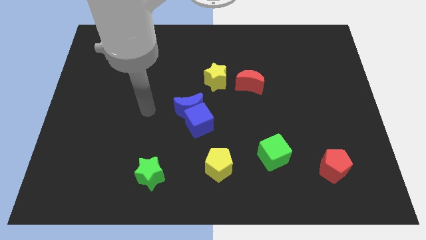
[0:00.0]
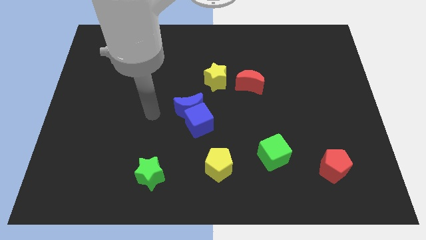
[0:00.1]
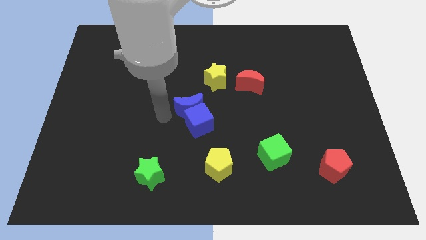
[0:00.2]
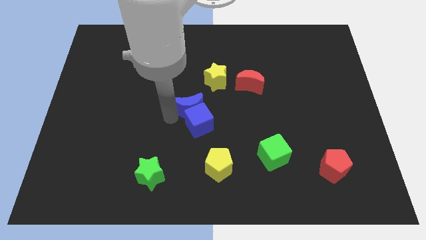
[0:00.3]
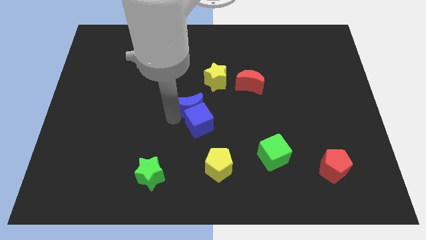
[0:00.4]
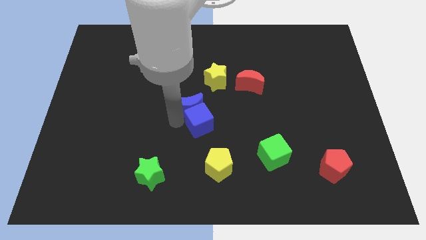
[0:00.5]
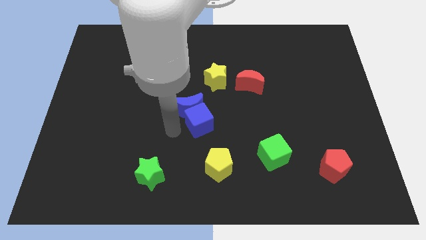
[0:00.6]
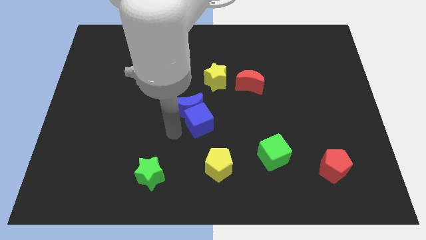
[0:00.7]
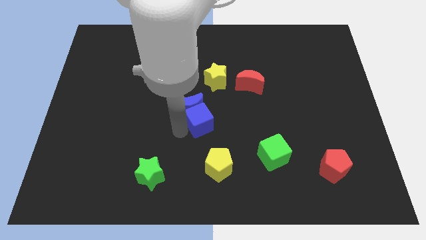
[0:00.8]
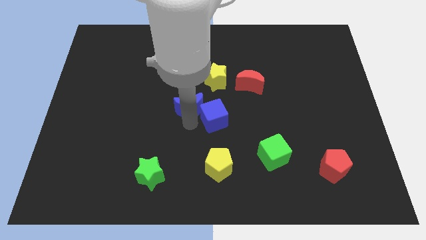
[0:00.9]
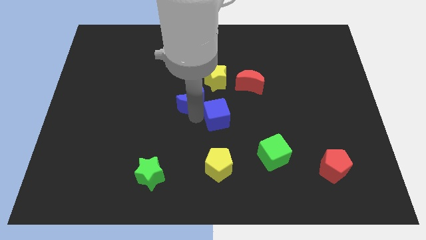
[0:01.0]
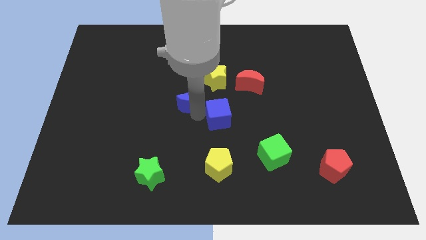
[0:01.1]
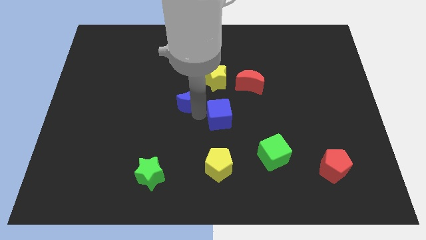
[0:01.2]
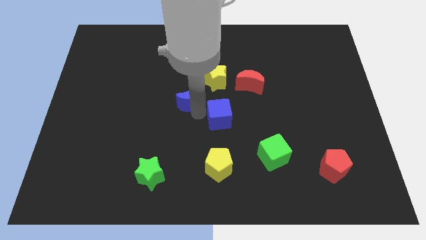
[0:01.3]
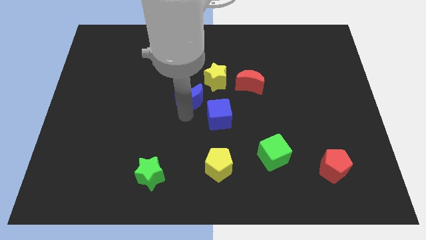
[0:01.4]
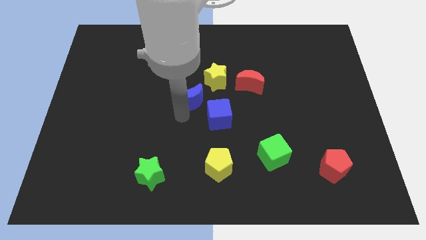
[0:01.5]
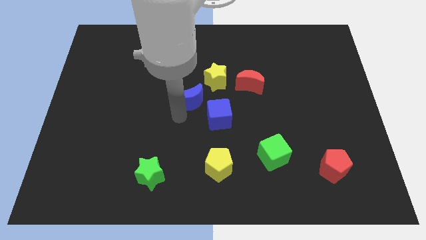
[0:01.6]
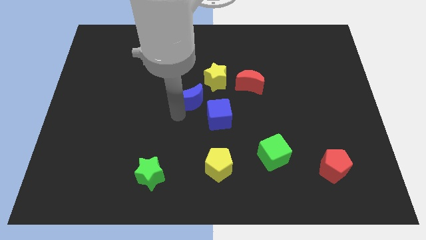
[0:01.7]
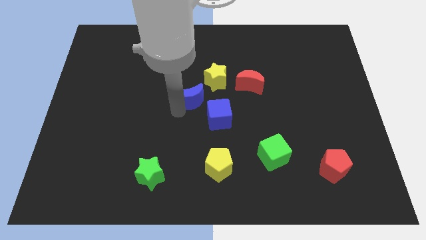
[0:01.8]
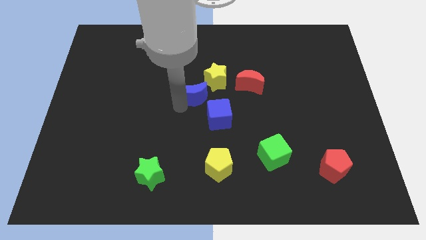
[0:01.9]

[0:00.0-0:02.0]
separate the blue moon and the blue cube

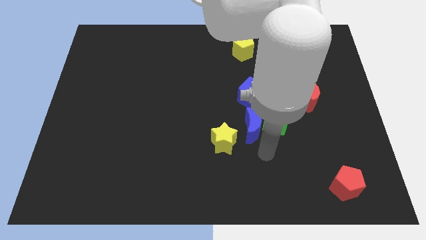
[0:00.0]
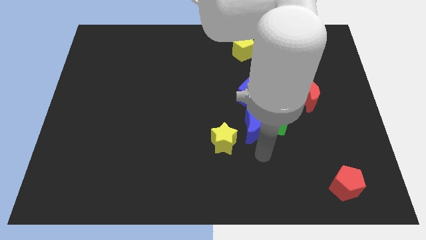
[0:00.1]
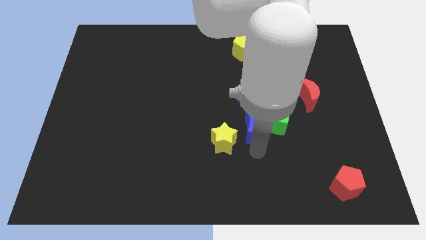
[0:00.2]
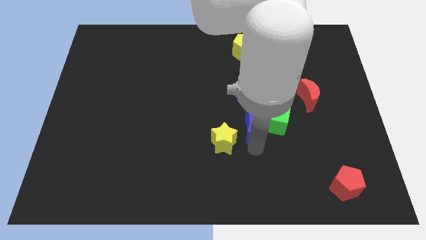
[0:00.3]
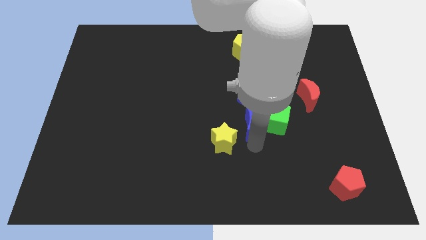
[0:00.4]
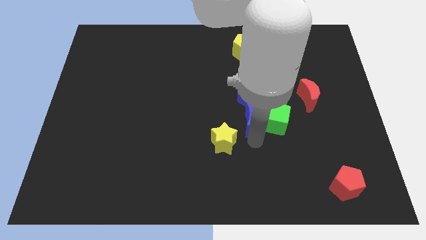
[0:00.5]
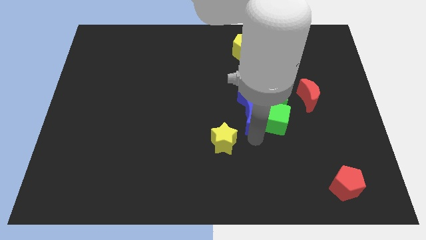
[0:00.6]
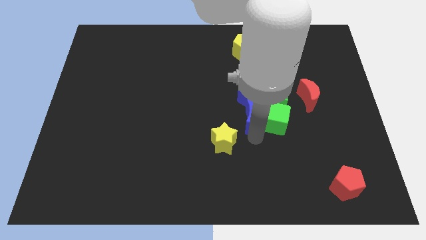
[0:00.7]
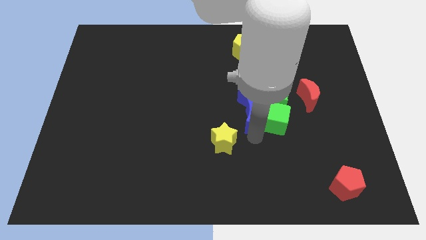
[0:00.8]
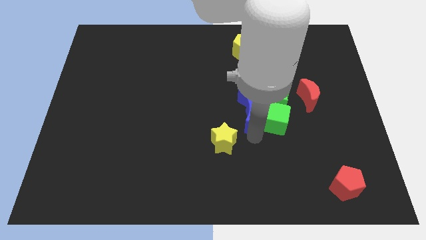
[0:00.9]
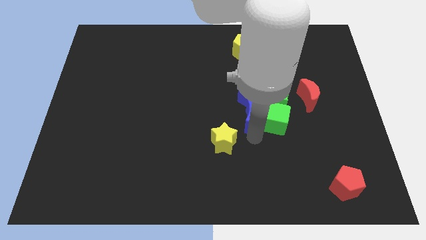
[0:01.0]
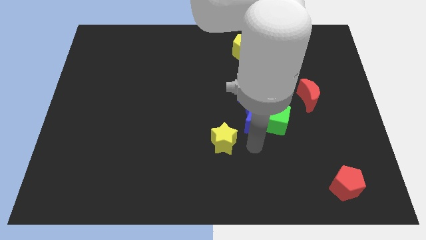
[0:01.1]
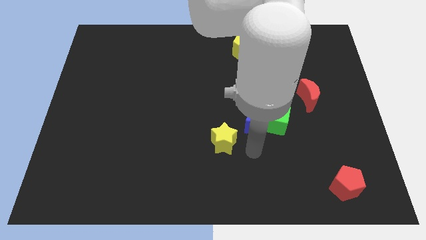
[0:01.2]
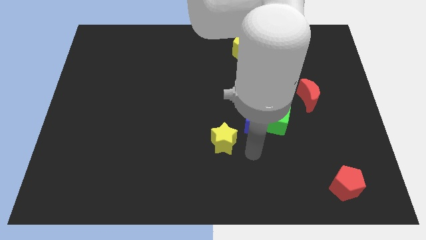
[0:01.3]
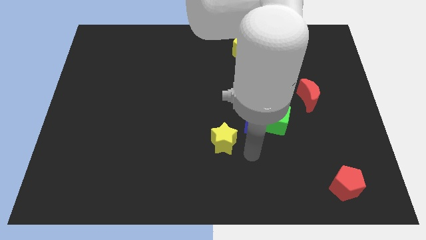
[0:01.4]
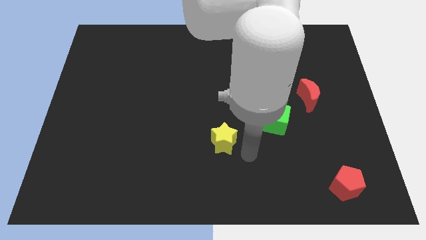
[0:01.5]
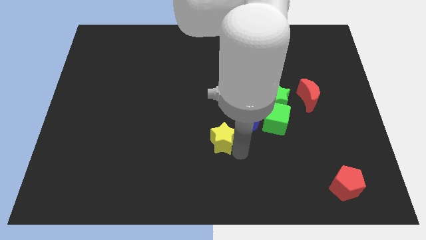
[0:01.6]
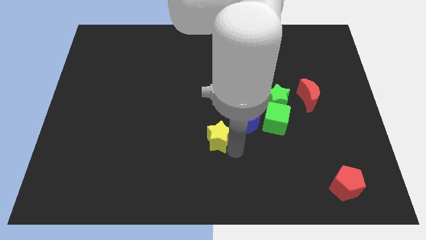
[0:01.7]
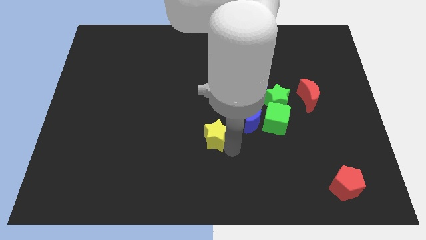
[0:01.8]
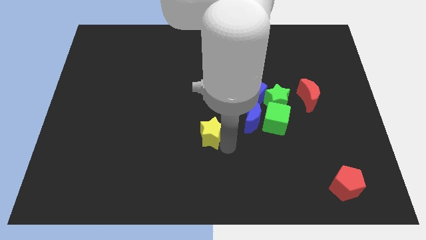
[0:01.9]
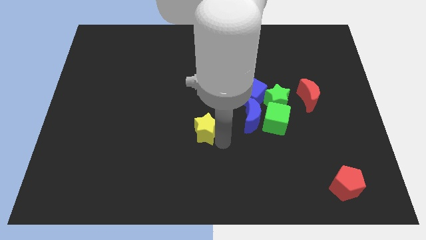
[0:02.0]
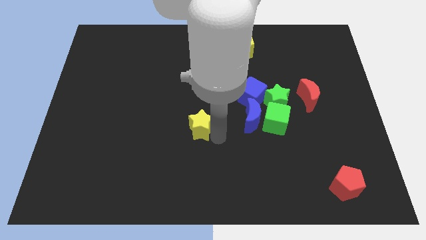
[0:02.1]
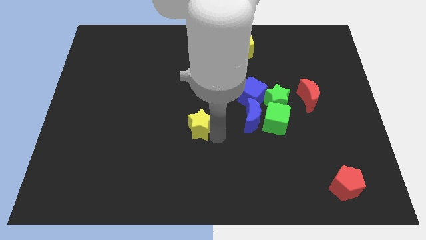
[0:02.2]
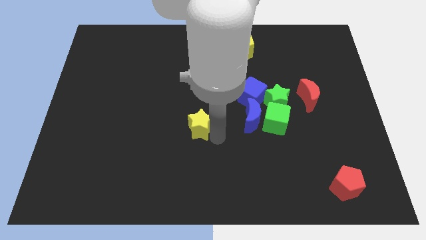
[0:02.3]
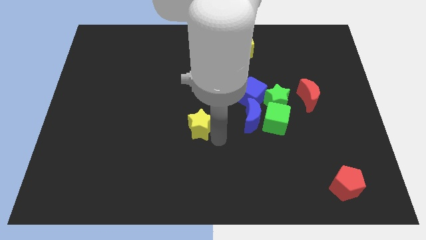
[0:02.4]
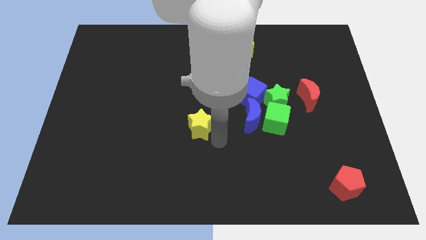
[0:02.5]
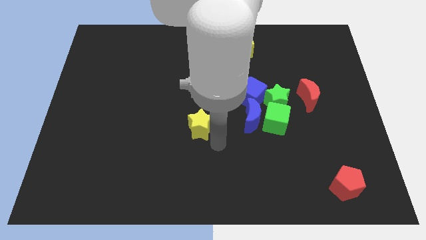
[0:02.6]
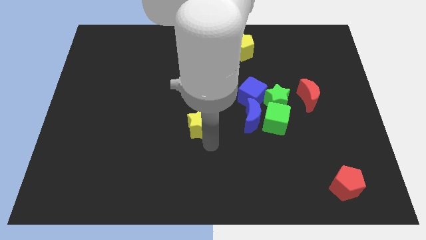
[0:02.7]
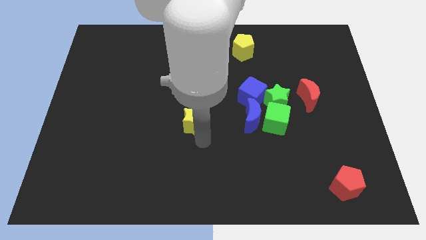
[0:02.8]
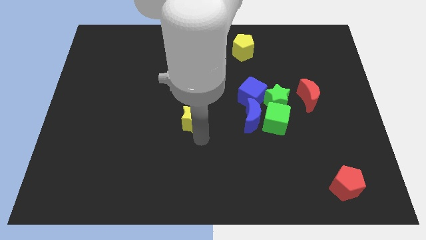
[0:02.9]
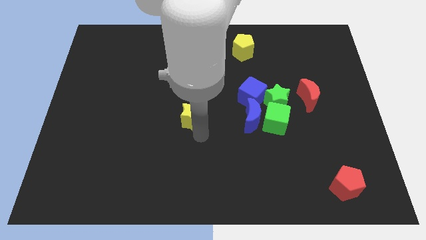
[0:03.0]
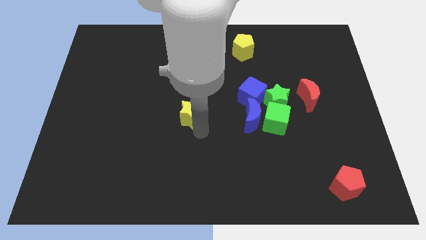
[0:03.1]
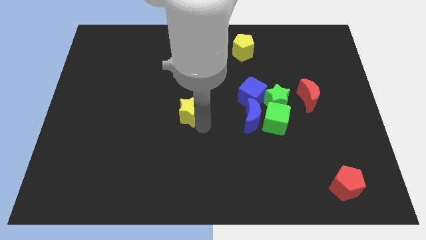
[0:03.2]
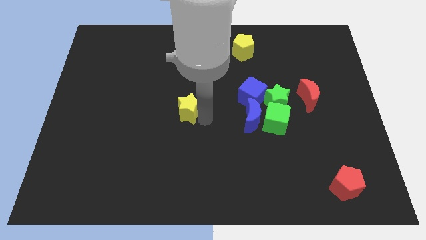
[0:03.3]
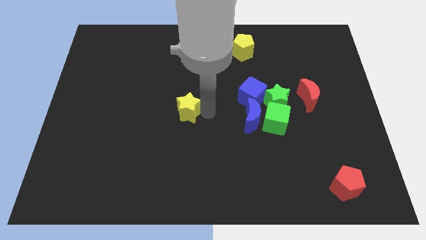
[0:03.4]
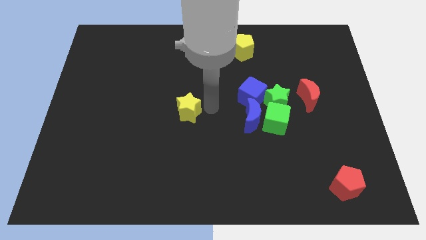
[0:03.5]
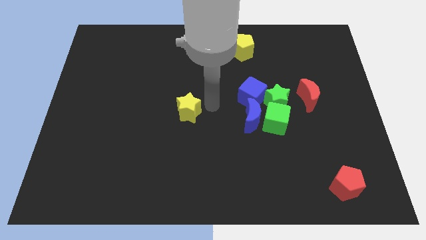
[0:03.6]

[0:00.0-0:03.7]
move yellow star upwards

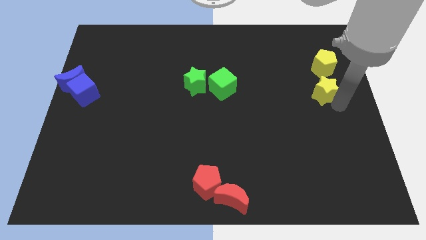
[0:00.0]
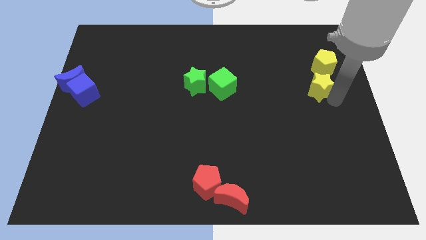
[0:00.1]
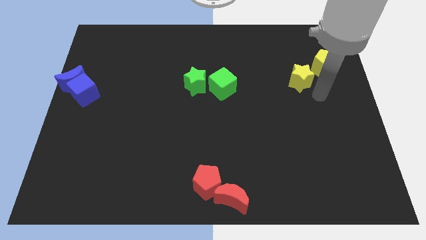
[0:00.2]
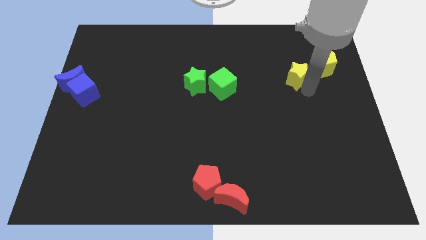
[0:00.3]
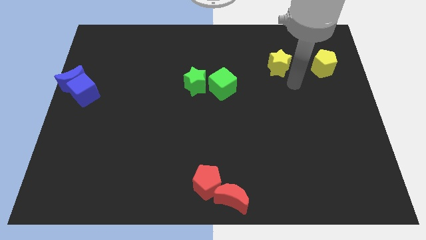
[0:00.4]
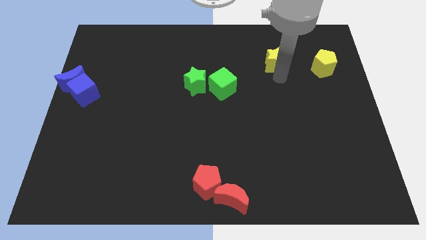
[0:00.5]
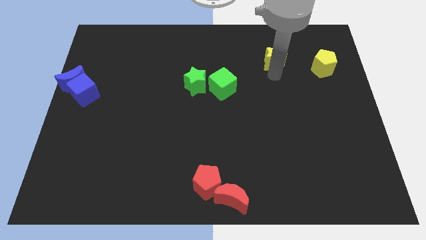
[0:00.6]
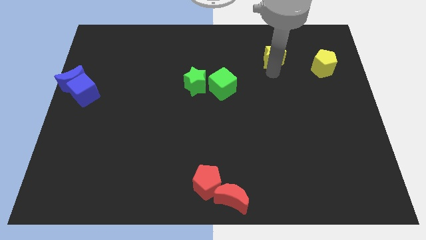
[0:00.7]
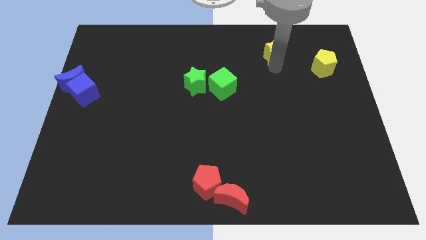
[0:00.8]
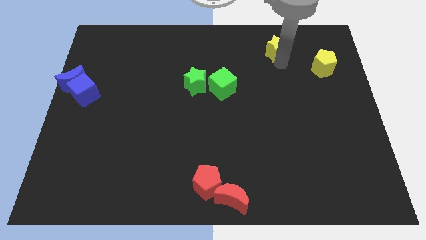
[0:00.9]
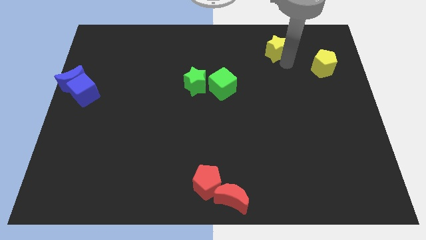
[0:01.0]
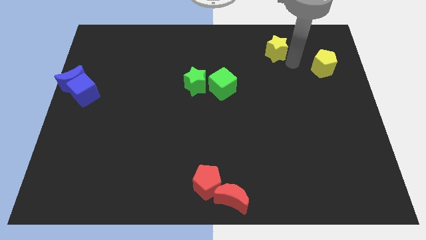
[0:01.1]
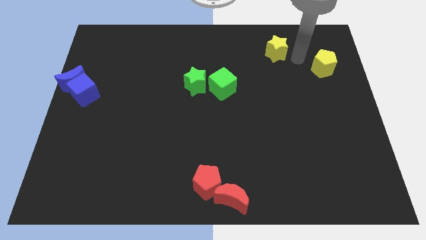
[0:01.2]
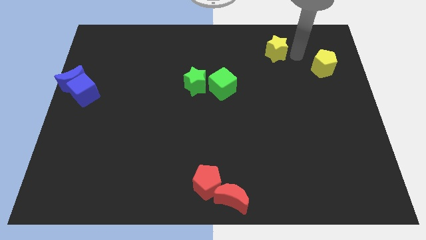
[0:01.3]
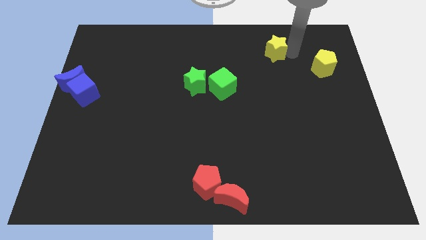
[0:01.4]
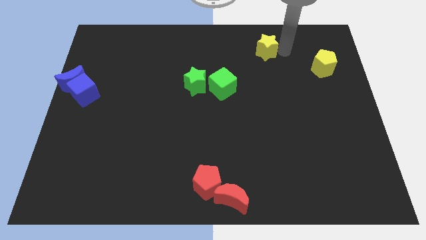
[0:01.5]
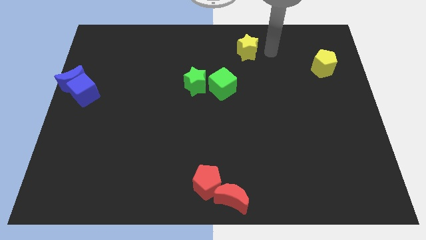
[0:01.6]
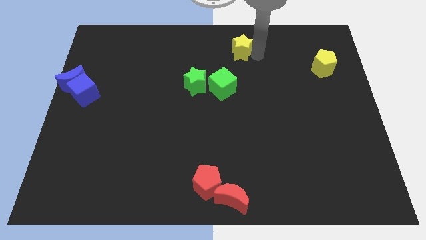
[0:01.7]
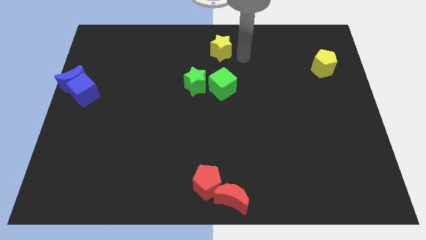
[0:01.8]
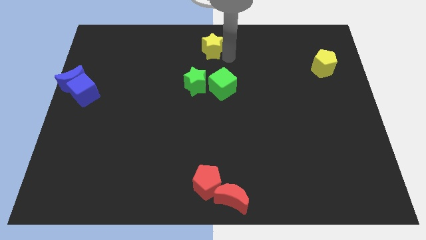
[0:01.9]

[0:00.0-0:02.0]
slide yellow pentagon at the top center of the board

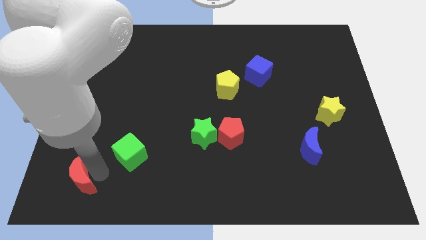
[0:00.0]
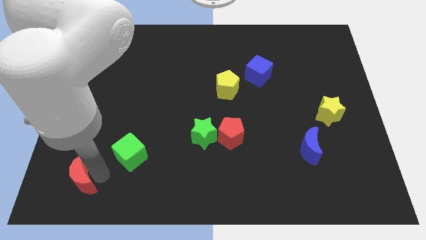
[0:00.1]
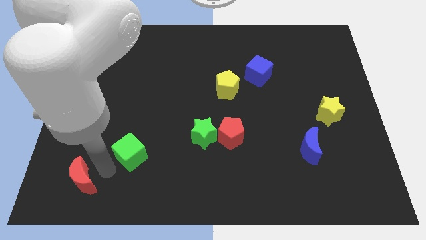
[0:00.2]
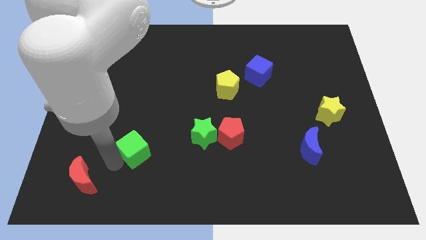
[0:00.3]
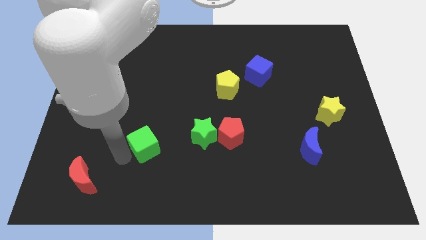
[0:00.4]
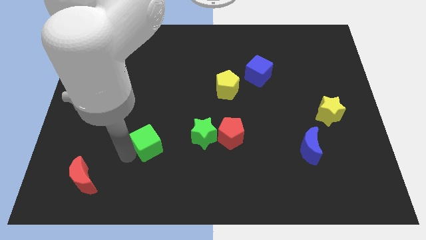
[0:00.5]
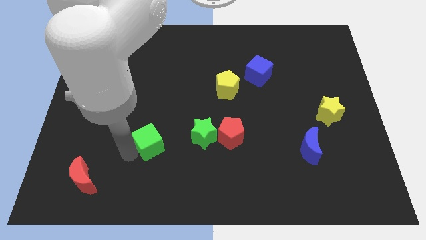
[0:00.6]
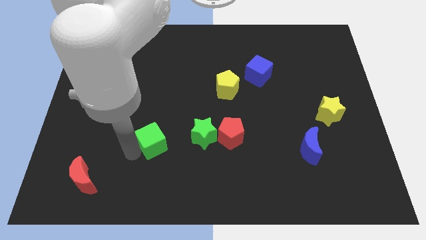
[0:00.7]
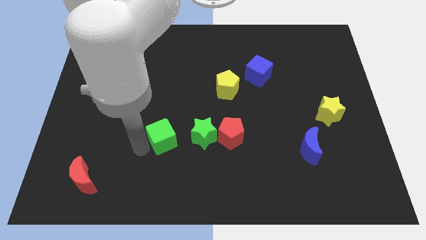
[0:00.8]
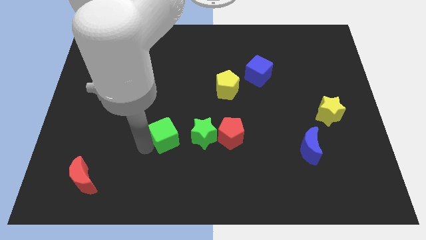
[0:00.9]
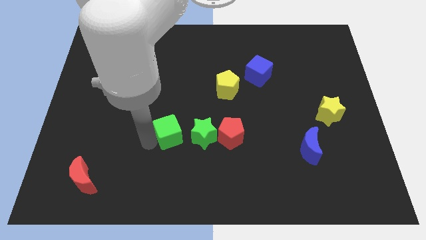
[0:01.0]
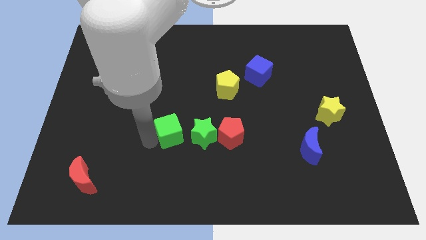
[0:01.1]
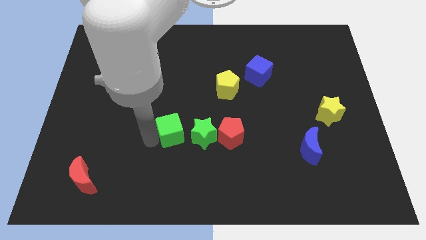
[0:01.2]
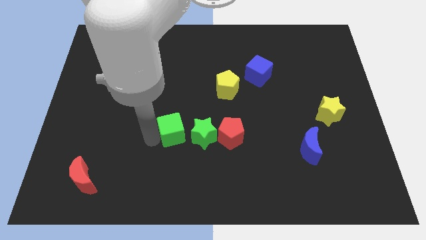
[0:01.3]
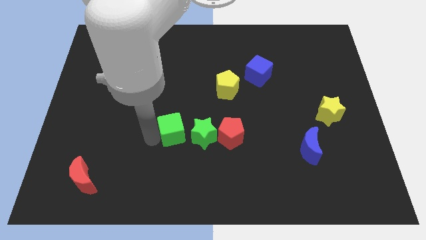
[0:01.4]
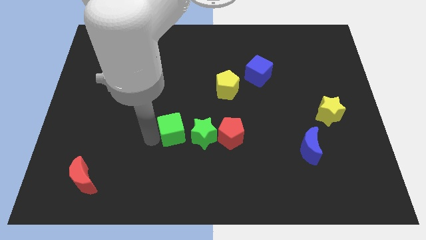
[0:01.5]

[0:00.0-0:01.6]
push the green cube to the left of the green star
